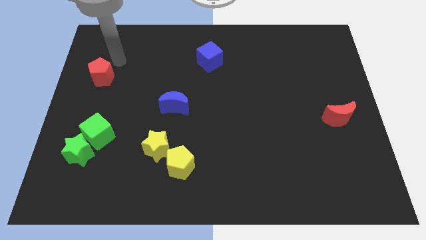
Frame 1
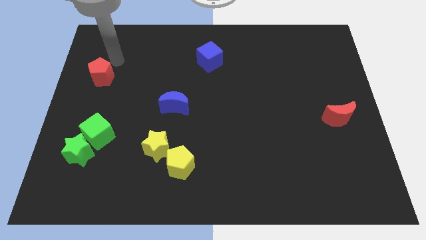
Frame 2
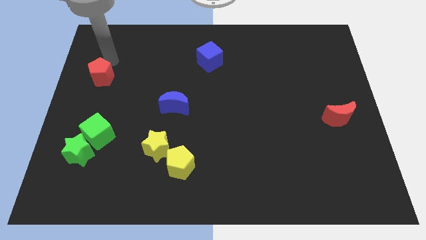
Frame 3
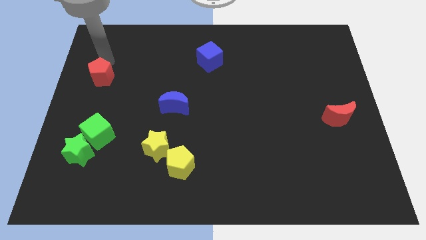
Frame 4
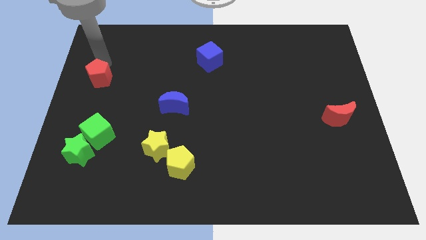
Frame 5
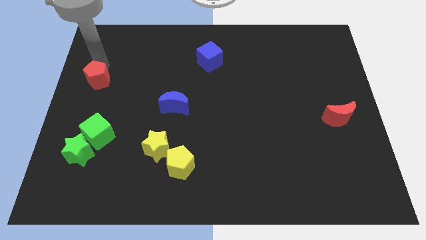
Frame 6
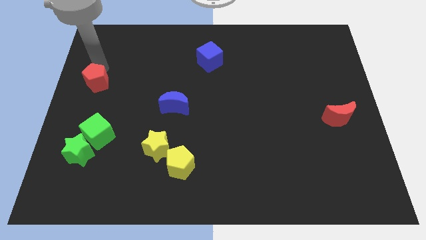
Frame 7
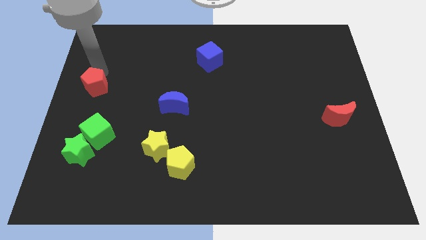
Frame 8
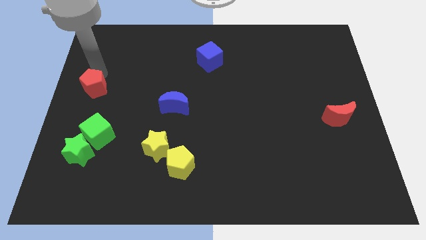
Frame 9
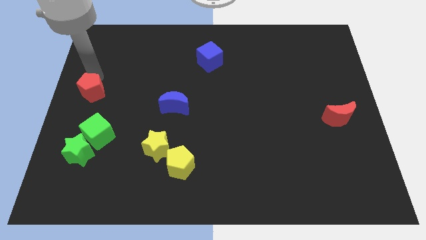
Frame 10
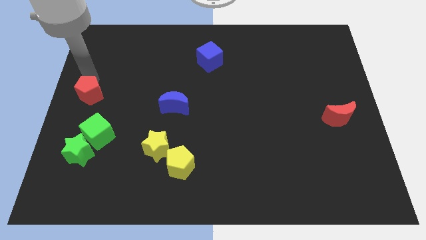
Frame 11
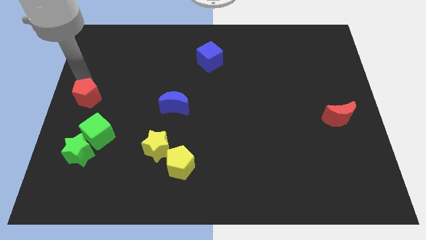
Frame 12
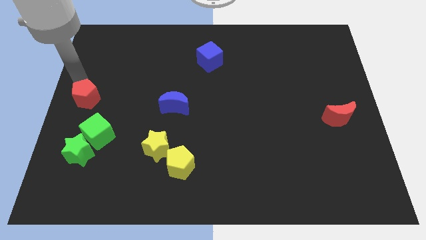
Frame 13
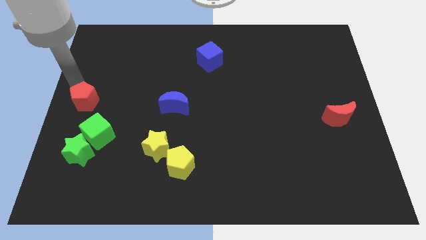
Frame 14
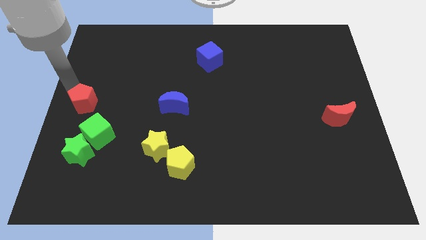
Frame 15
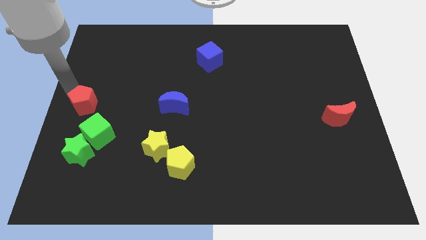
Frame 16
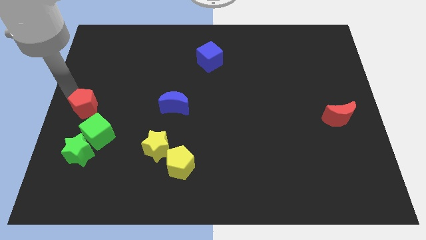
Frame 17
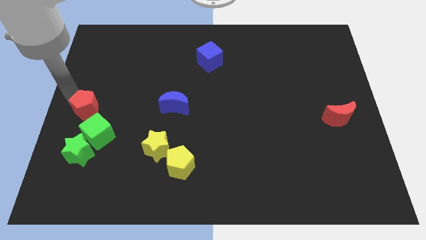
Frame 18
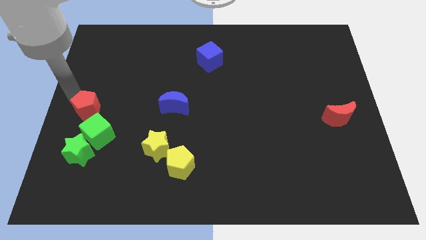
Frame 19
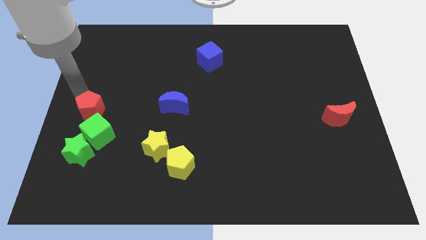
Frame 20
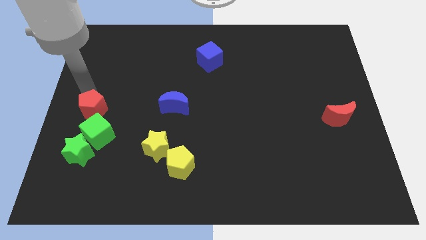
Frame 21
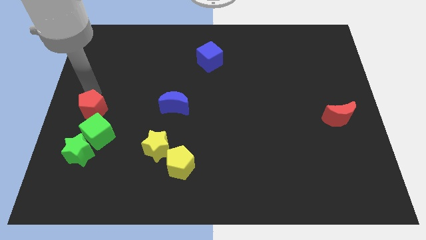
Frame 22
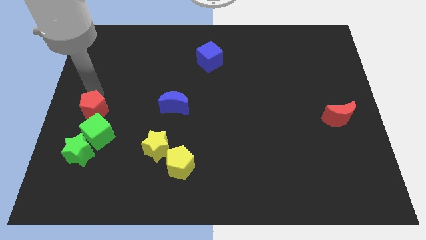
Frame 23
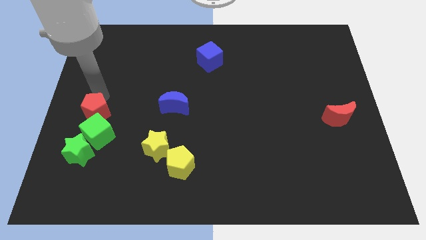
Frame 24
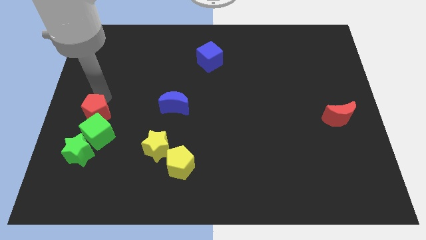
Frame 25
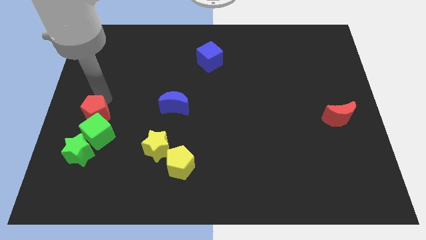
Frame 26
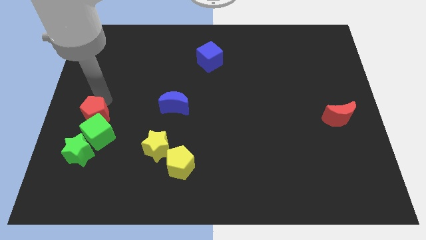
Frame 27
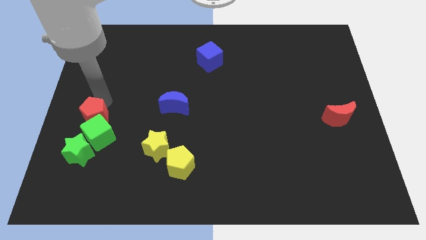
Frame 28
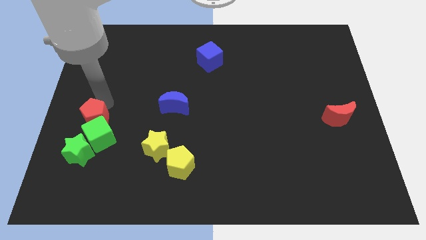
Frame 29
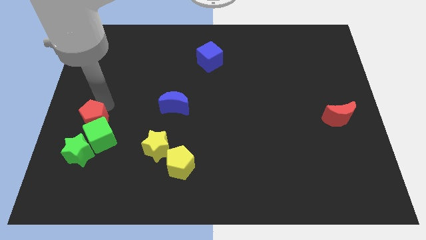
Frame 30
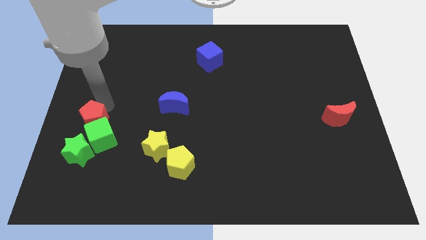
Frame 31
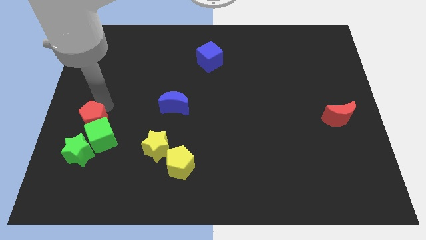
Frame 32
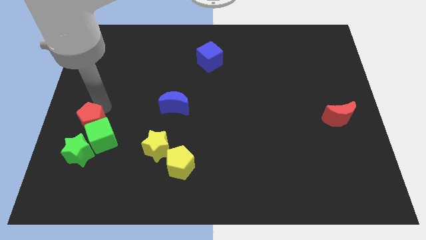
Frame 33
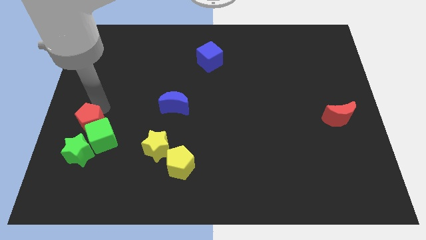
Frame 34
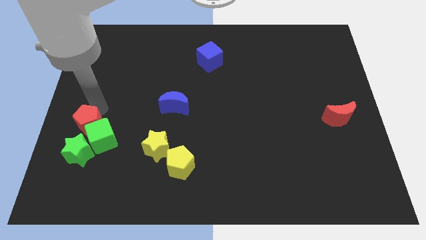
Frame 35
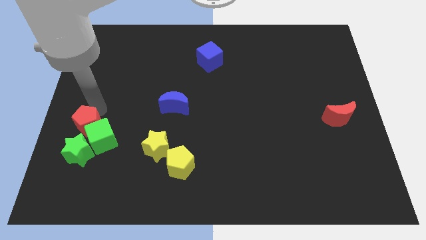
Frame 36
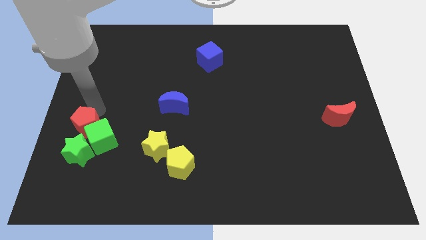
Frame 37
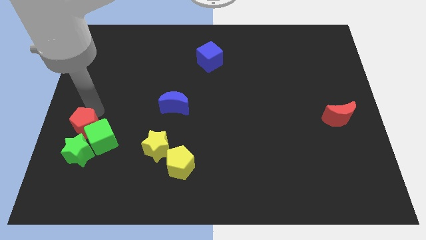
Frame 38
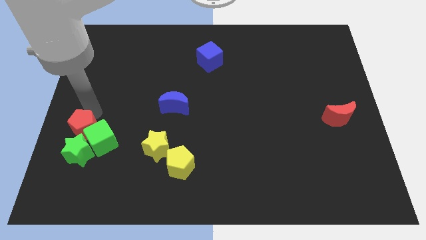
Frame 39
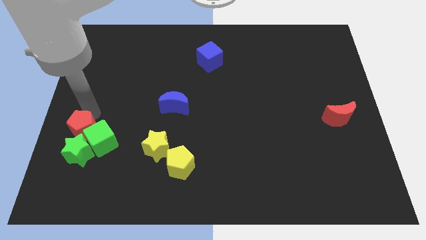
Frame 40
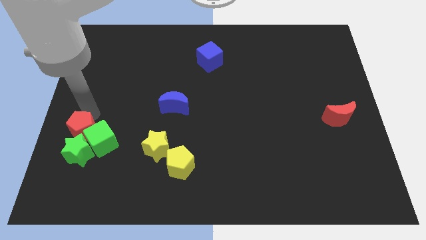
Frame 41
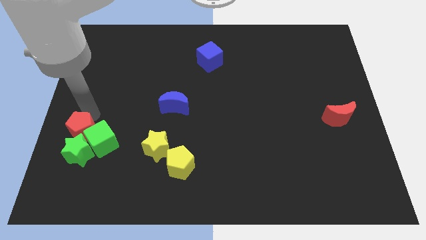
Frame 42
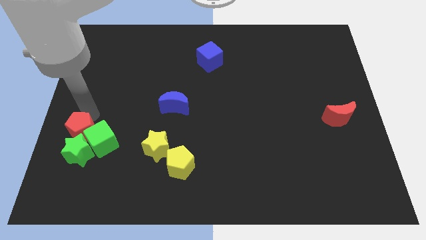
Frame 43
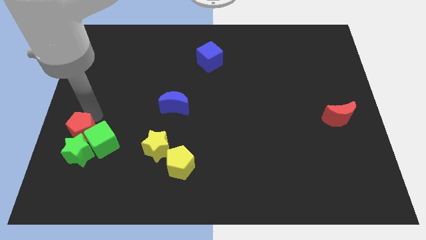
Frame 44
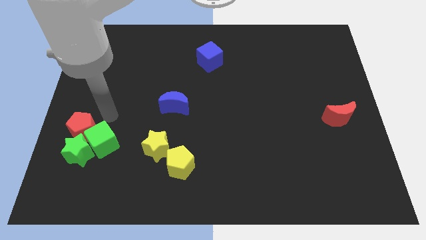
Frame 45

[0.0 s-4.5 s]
move the red pentagon into green cube and green star

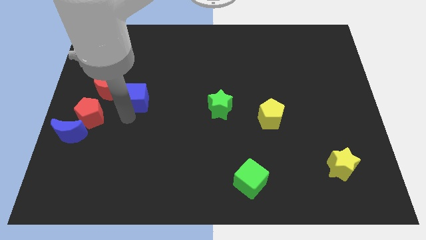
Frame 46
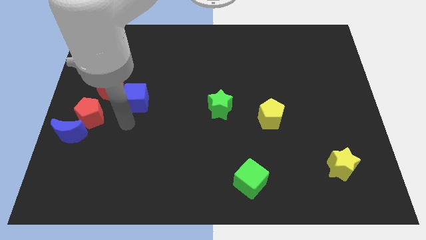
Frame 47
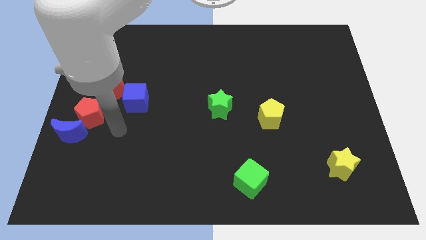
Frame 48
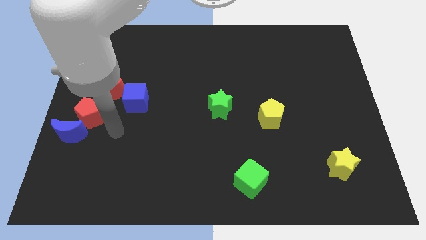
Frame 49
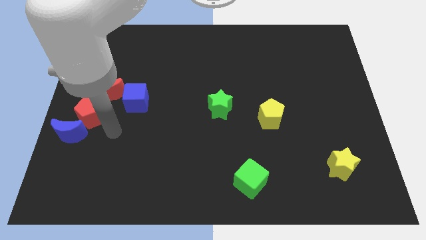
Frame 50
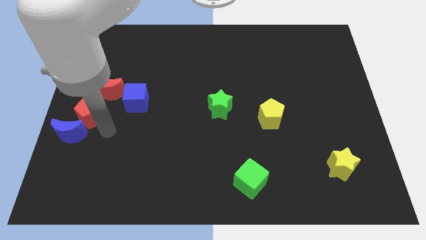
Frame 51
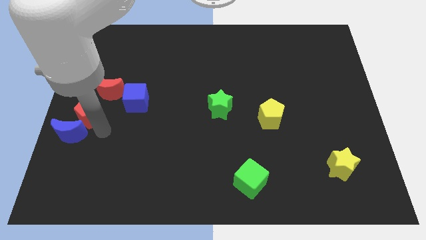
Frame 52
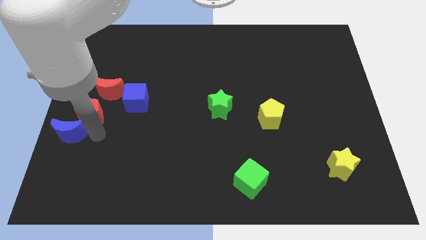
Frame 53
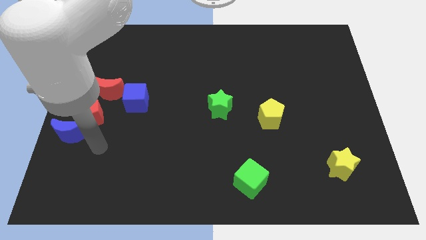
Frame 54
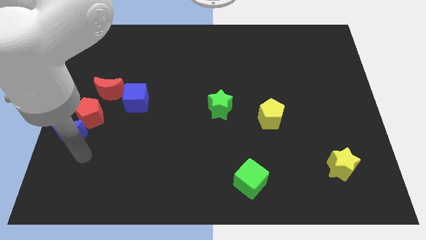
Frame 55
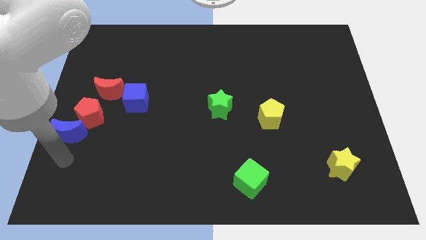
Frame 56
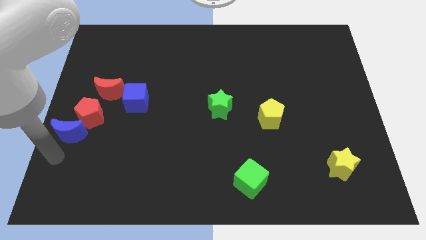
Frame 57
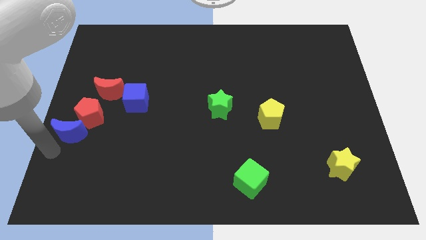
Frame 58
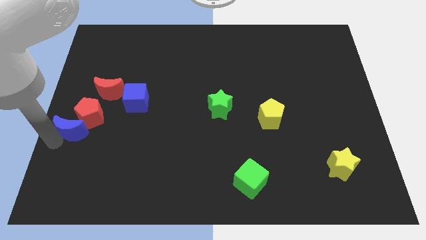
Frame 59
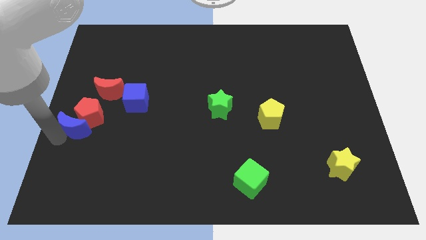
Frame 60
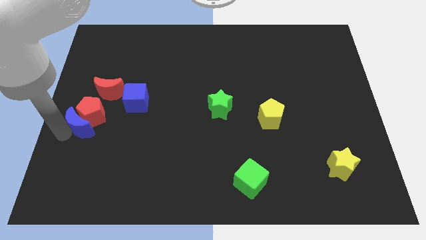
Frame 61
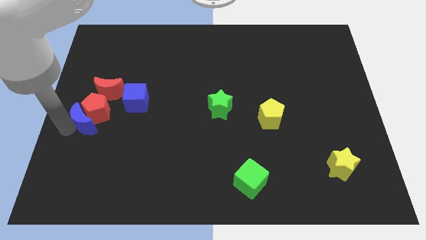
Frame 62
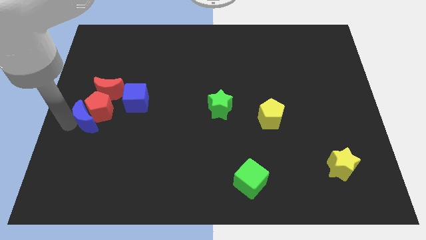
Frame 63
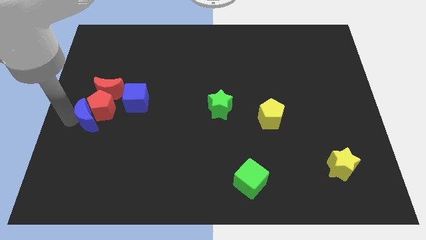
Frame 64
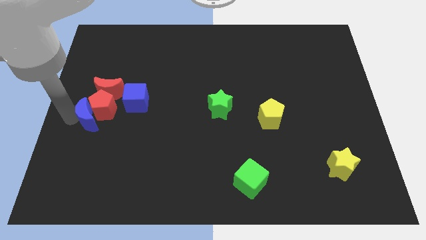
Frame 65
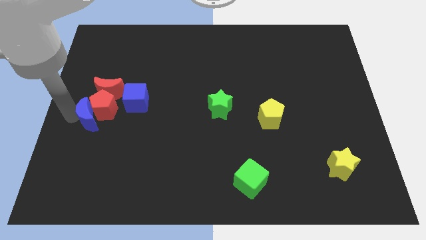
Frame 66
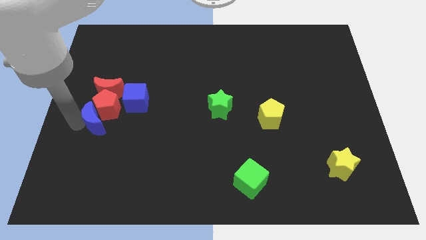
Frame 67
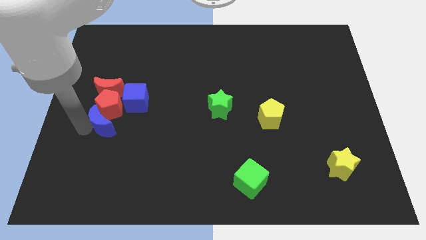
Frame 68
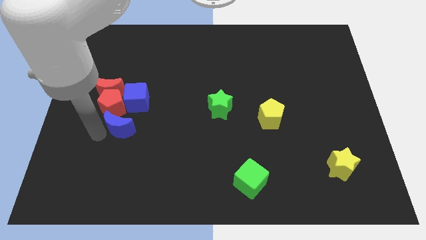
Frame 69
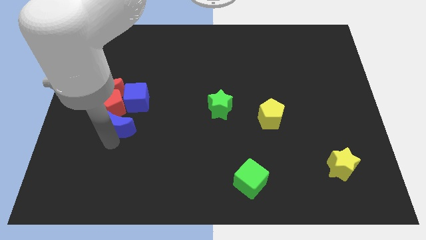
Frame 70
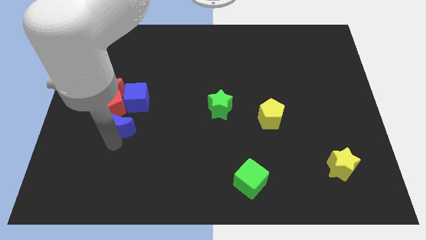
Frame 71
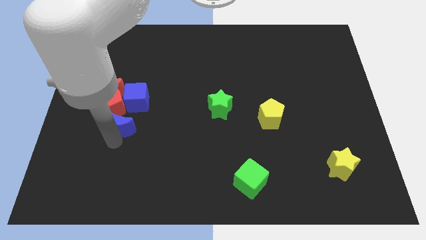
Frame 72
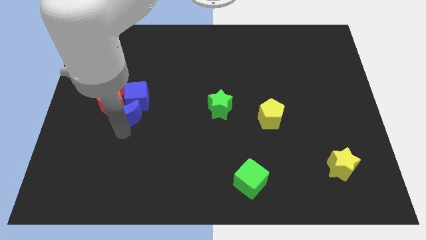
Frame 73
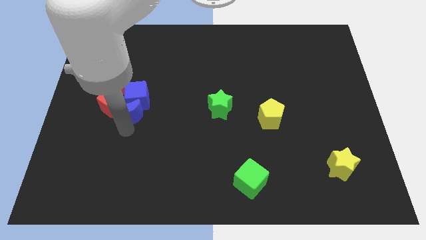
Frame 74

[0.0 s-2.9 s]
pussh the blue moon into the red pentagon

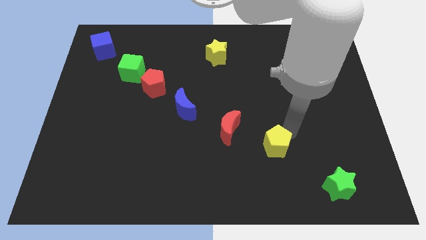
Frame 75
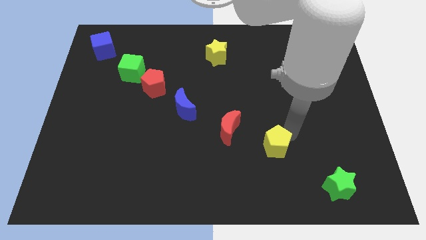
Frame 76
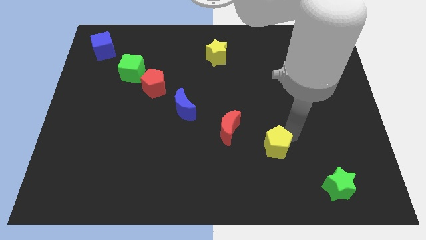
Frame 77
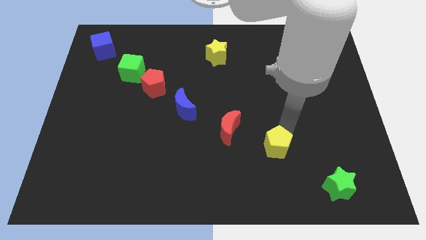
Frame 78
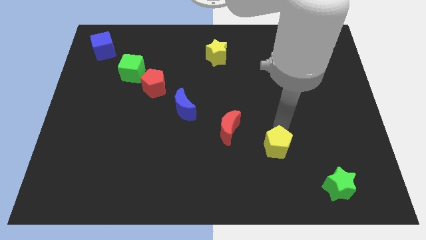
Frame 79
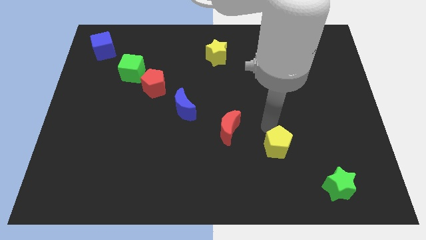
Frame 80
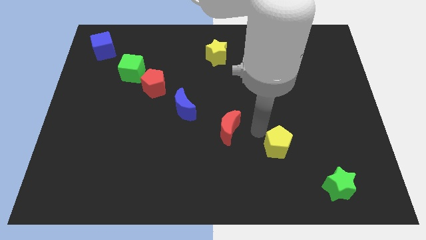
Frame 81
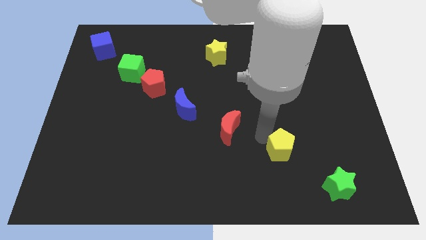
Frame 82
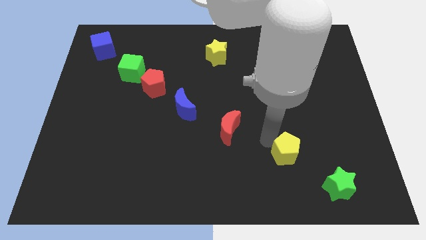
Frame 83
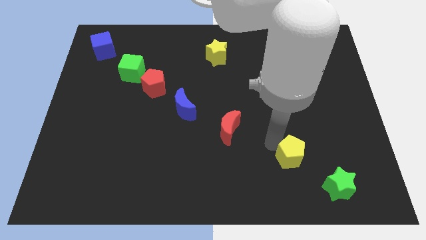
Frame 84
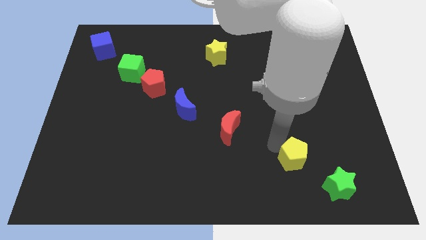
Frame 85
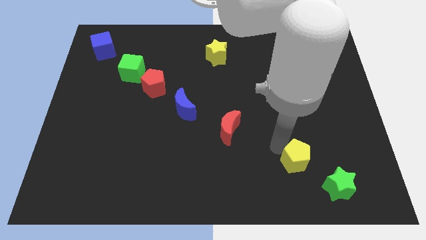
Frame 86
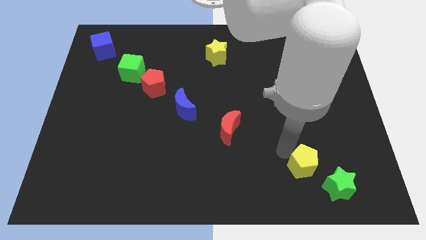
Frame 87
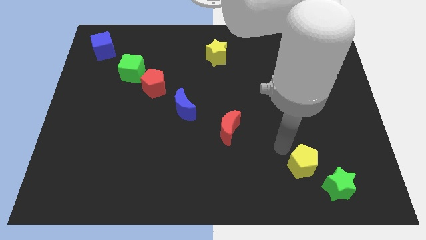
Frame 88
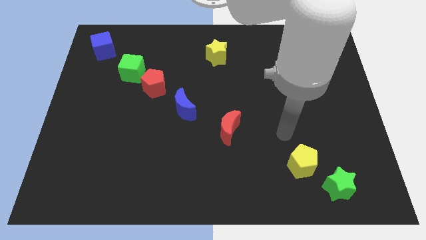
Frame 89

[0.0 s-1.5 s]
push the yellow pentagon closer to the green star
